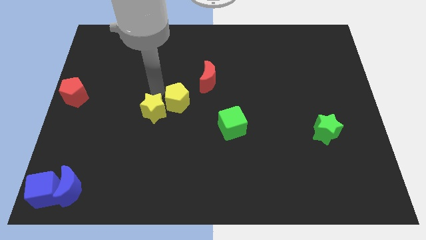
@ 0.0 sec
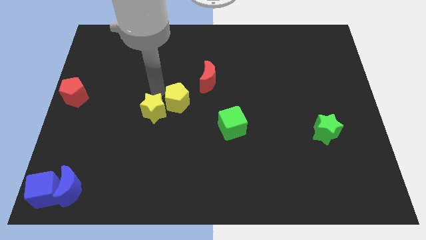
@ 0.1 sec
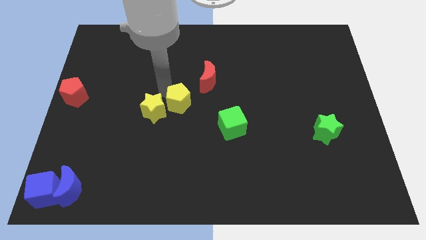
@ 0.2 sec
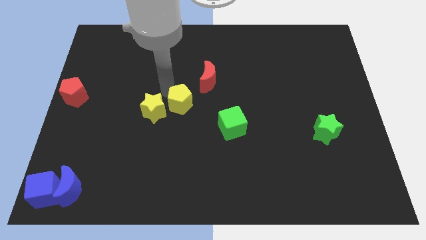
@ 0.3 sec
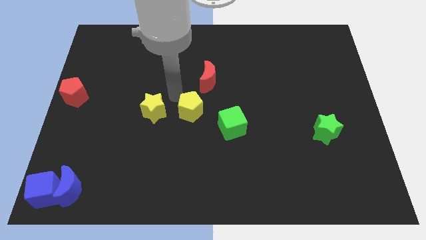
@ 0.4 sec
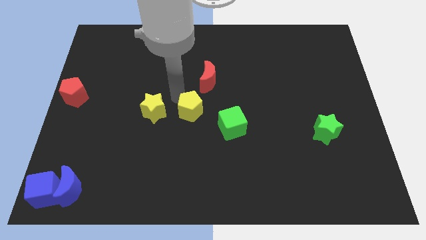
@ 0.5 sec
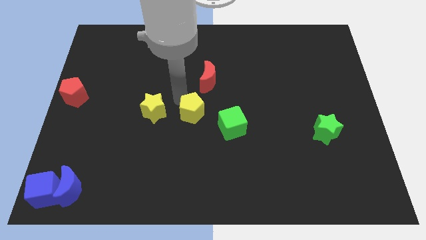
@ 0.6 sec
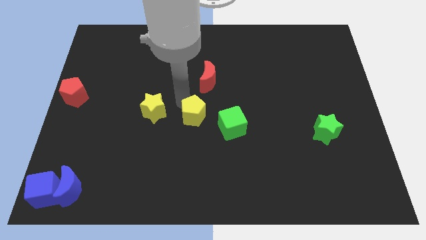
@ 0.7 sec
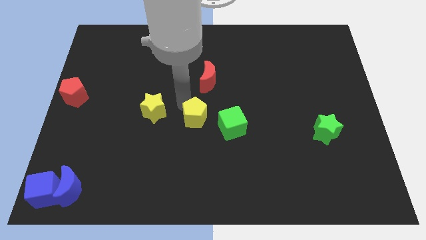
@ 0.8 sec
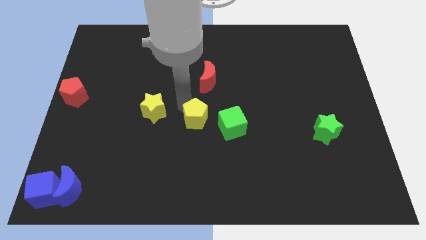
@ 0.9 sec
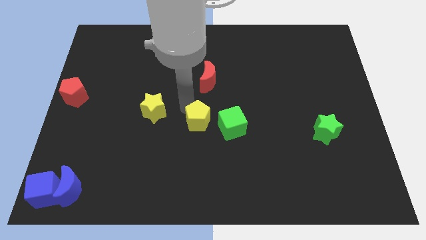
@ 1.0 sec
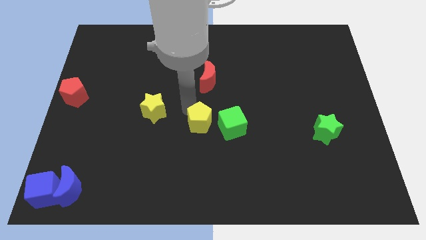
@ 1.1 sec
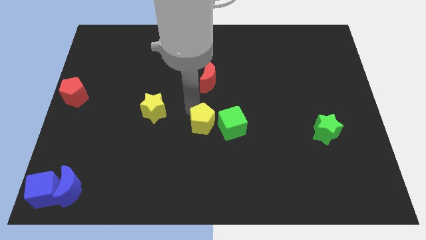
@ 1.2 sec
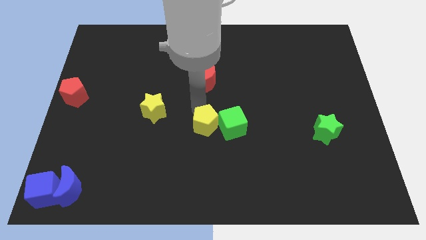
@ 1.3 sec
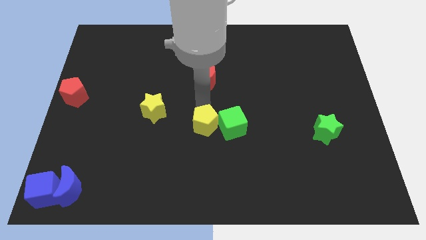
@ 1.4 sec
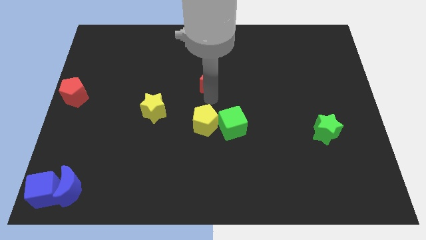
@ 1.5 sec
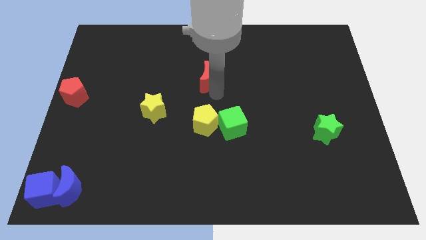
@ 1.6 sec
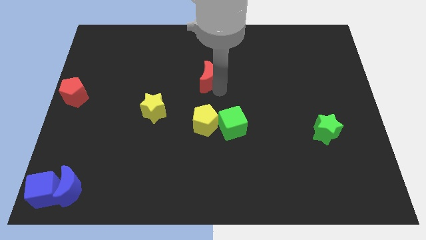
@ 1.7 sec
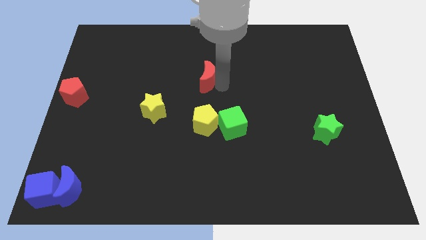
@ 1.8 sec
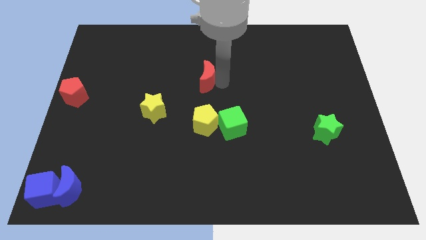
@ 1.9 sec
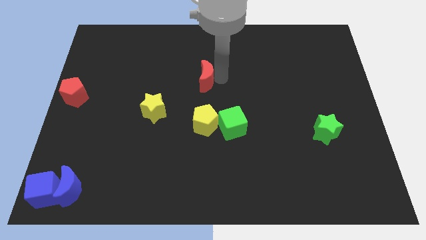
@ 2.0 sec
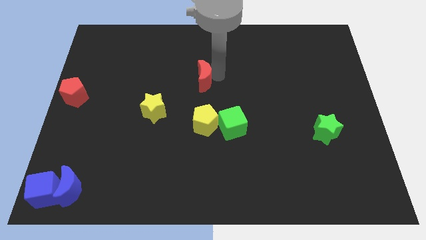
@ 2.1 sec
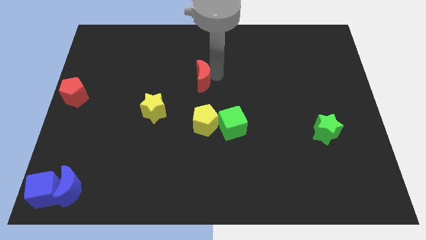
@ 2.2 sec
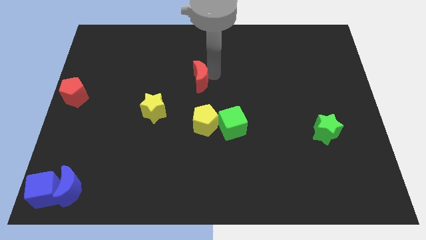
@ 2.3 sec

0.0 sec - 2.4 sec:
move the yellow pentagon to left side of the green cube

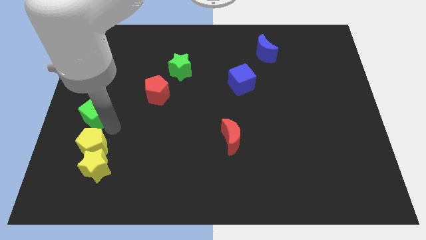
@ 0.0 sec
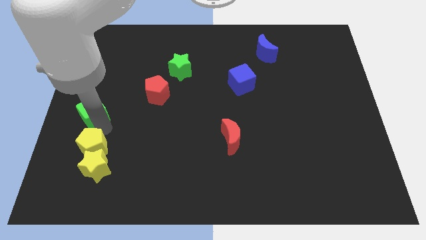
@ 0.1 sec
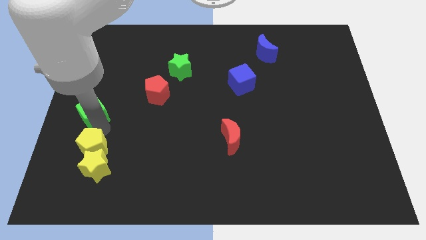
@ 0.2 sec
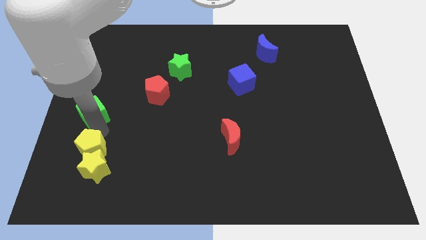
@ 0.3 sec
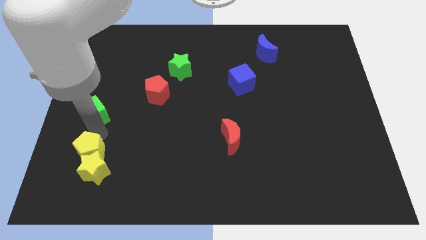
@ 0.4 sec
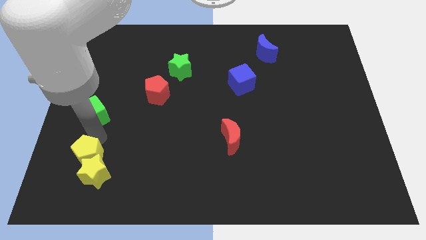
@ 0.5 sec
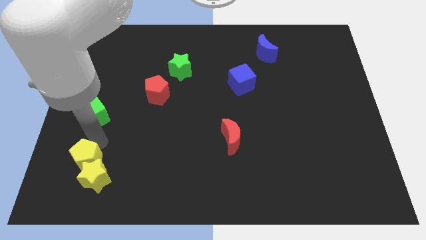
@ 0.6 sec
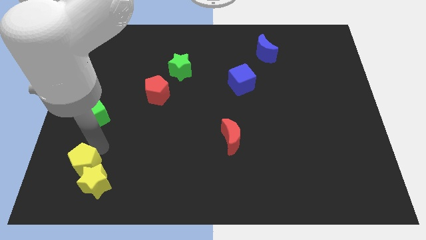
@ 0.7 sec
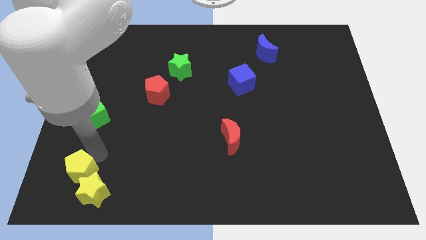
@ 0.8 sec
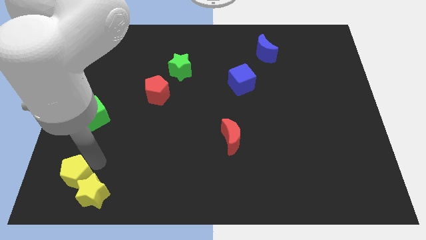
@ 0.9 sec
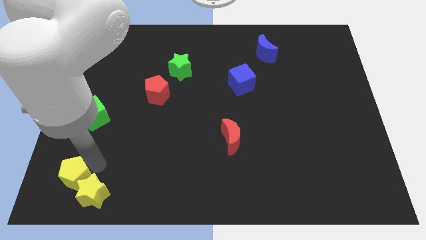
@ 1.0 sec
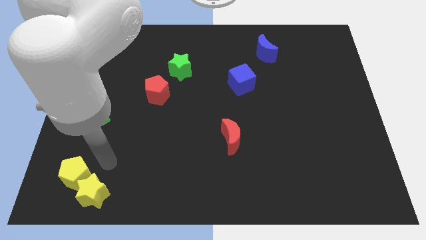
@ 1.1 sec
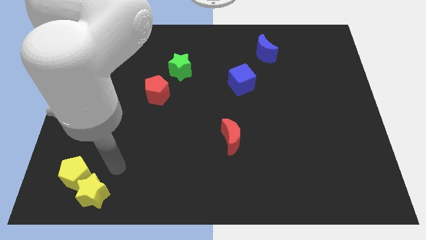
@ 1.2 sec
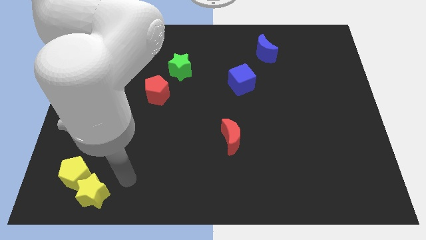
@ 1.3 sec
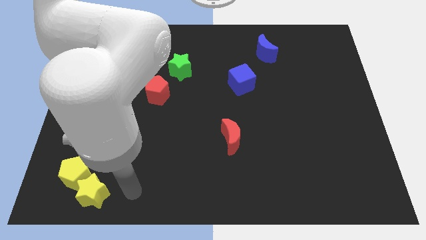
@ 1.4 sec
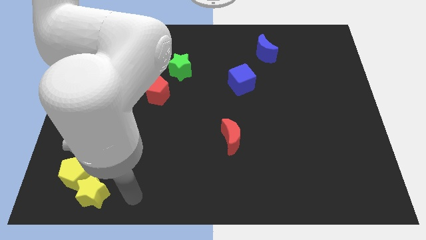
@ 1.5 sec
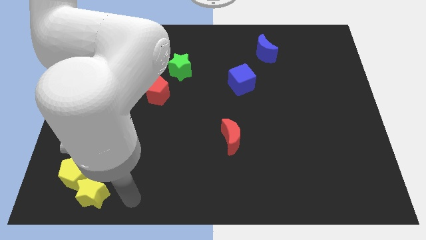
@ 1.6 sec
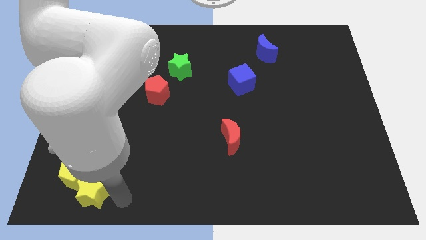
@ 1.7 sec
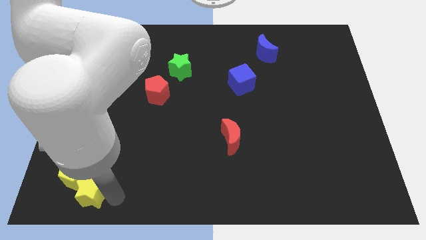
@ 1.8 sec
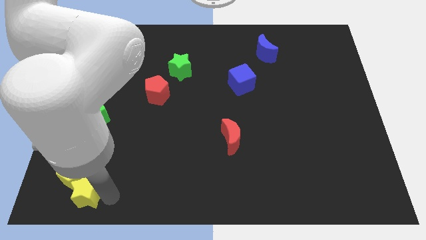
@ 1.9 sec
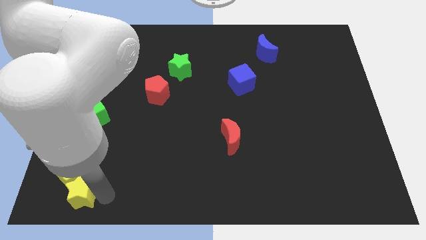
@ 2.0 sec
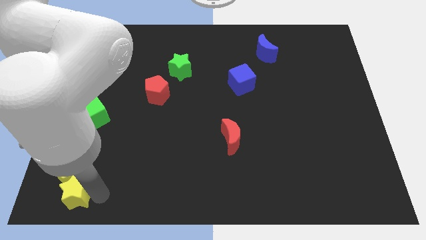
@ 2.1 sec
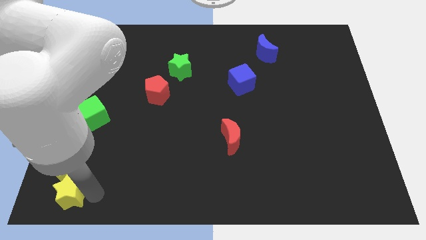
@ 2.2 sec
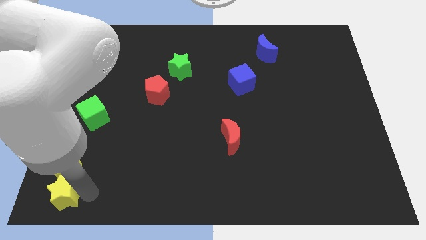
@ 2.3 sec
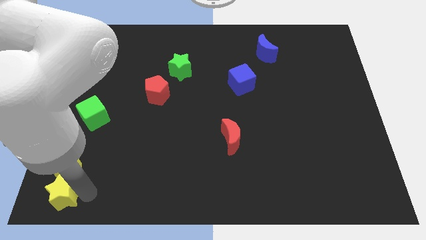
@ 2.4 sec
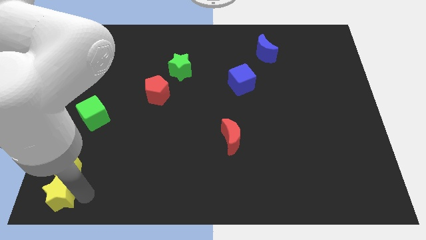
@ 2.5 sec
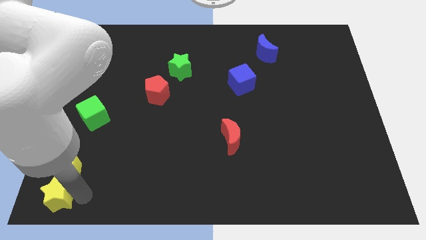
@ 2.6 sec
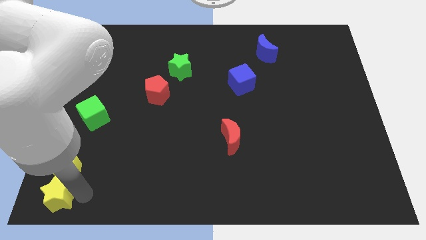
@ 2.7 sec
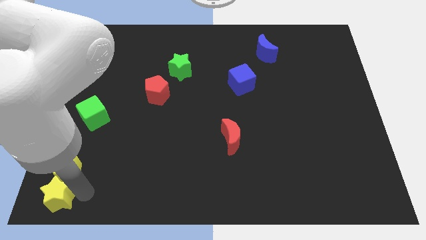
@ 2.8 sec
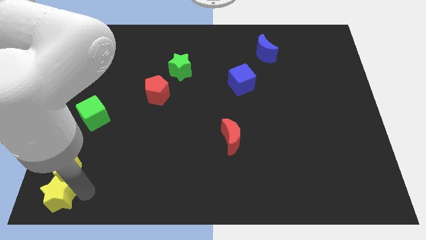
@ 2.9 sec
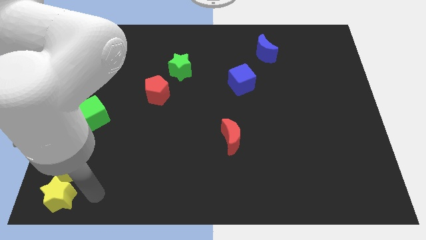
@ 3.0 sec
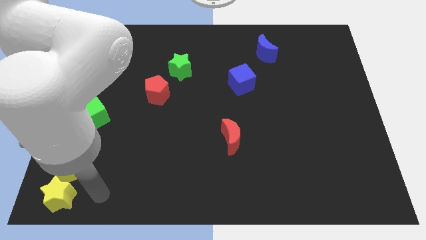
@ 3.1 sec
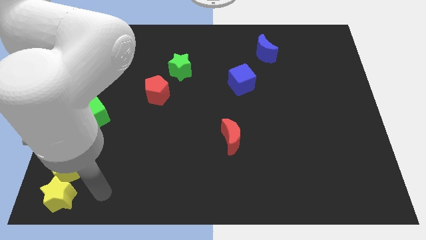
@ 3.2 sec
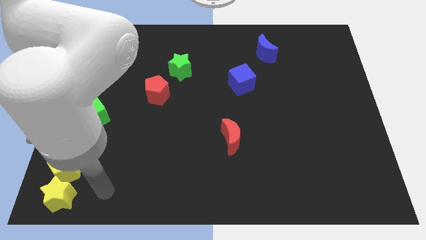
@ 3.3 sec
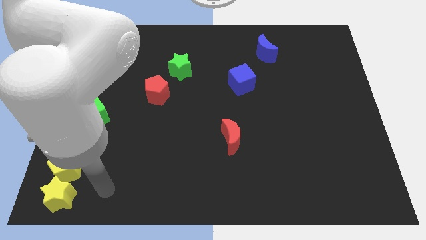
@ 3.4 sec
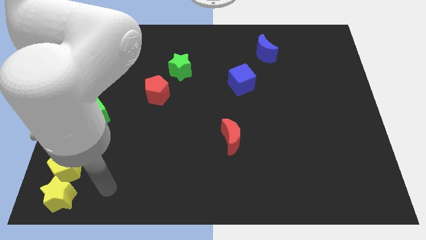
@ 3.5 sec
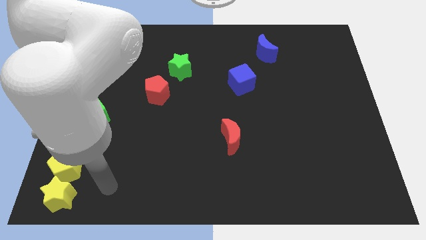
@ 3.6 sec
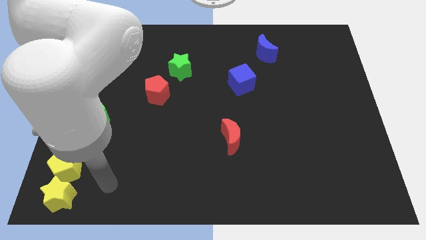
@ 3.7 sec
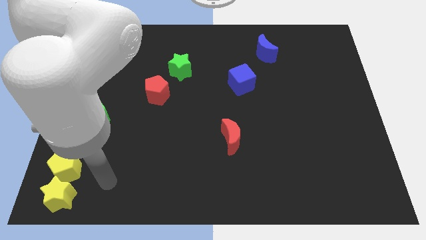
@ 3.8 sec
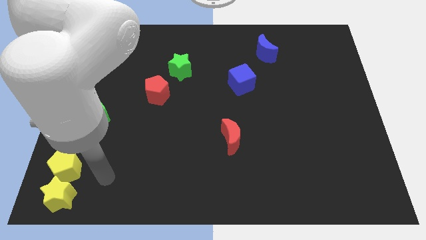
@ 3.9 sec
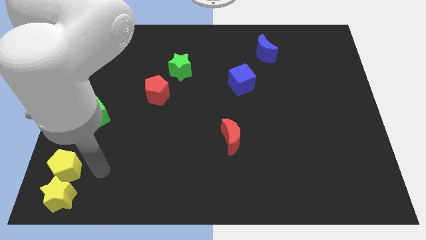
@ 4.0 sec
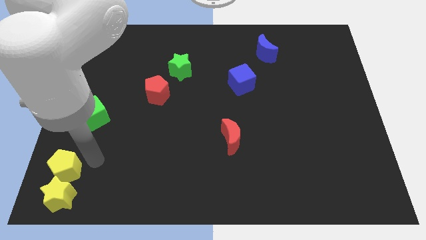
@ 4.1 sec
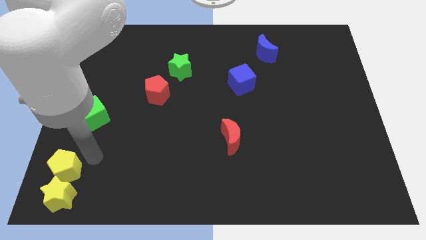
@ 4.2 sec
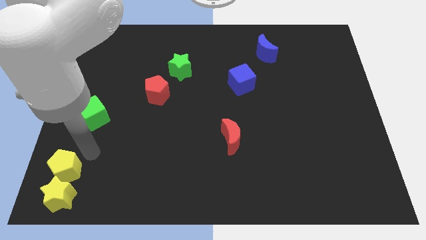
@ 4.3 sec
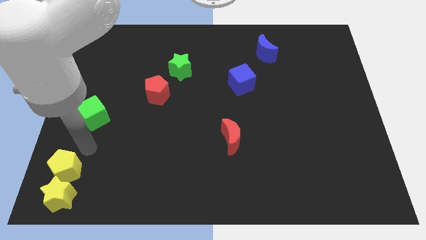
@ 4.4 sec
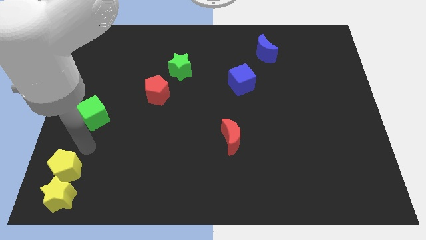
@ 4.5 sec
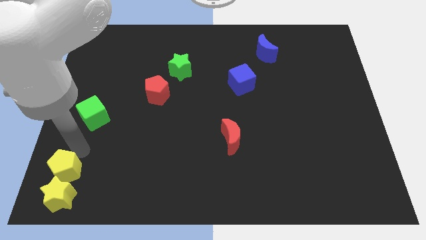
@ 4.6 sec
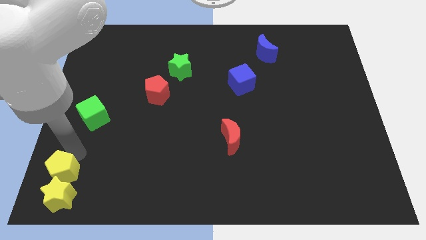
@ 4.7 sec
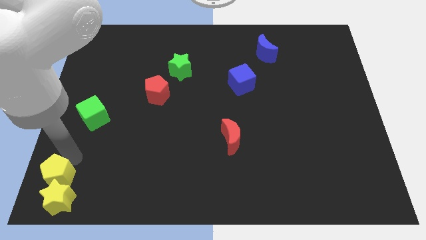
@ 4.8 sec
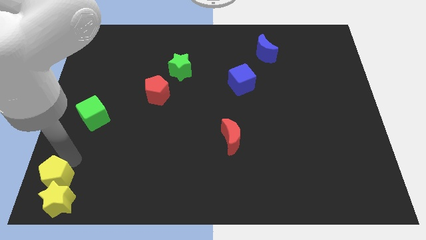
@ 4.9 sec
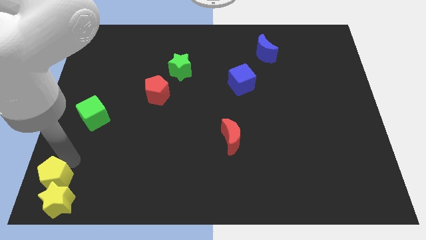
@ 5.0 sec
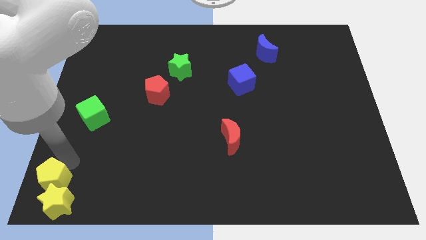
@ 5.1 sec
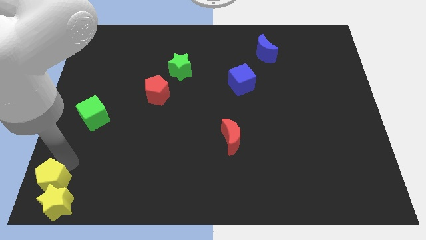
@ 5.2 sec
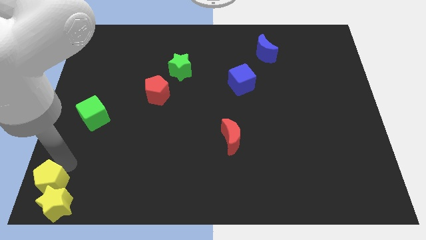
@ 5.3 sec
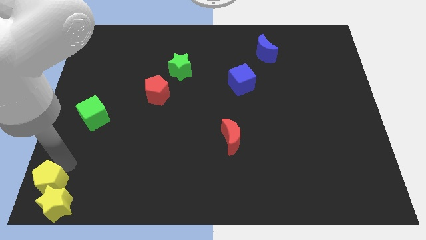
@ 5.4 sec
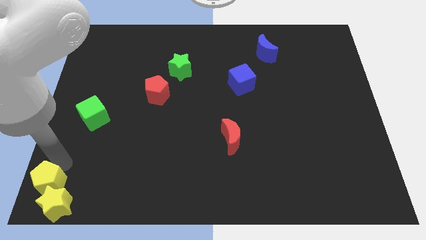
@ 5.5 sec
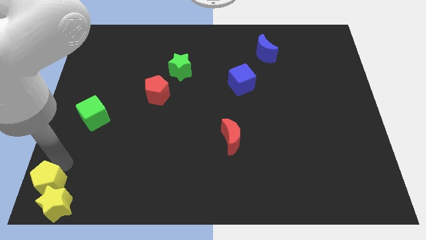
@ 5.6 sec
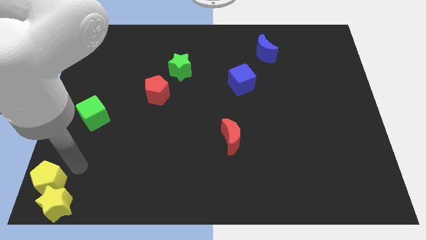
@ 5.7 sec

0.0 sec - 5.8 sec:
push the yellow blocks towards the bottom left corner of the board

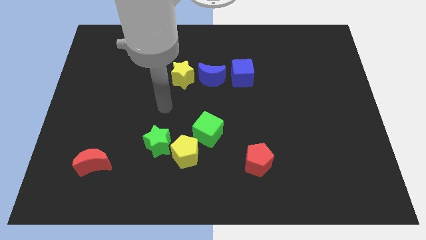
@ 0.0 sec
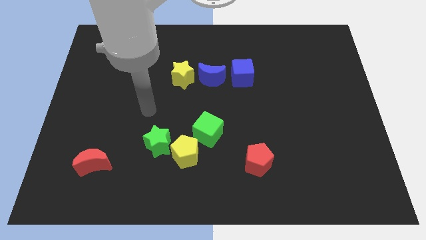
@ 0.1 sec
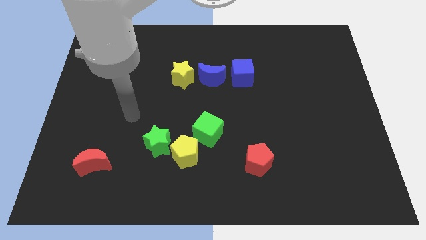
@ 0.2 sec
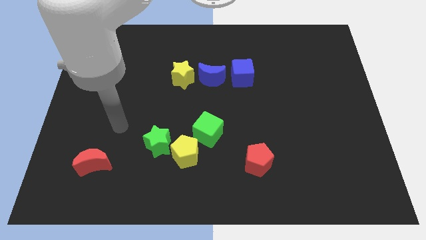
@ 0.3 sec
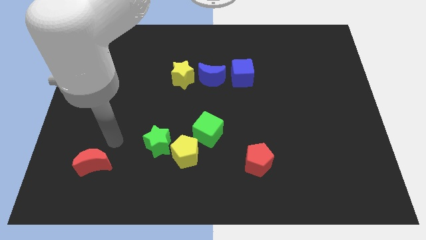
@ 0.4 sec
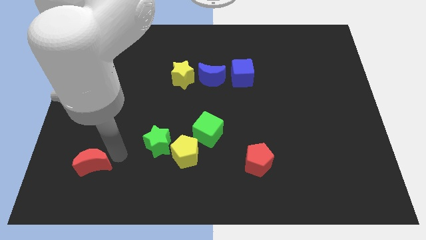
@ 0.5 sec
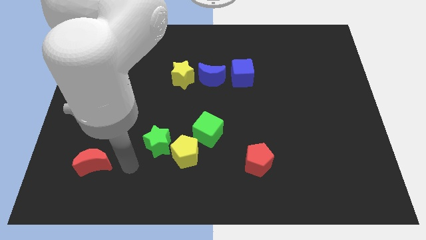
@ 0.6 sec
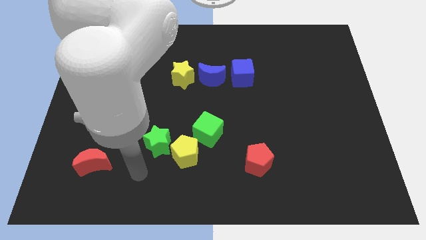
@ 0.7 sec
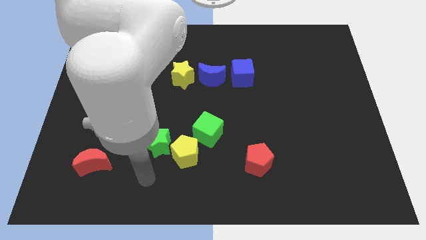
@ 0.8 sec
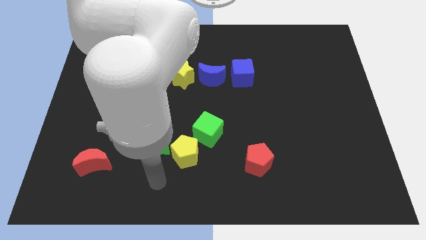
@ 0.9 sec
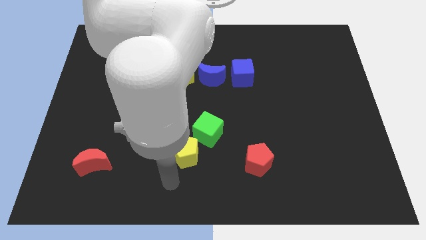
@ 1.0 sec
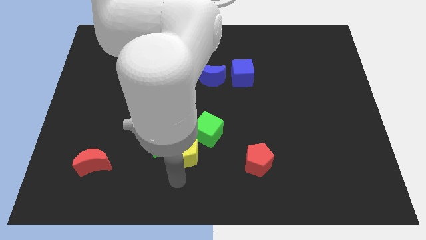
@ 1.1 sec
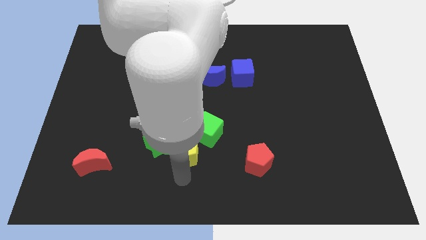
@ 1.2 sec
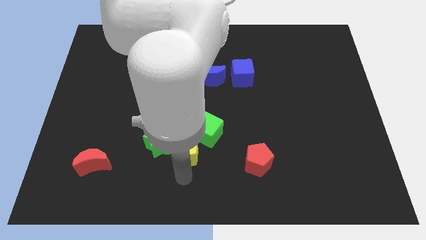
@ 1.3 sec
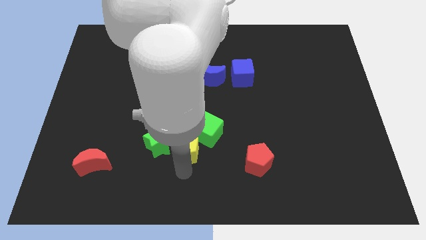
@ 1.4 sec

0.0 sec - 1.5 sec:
point your arm at the bottom side of the yellow pentagon
